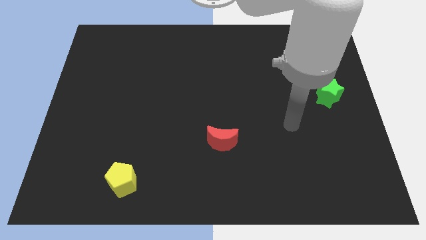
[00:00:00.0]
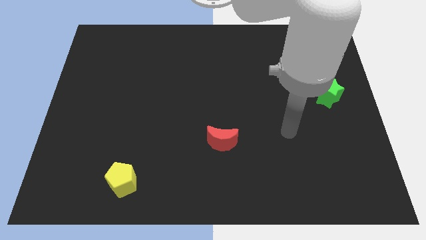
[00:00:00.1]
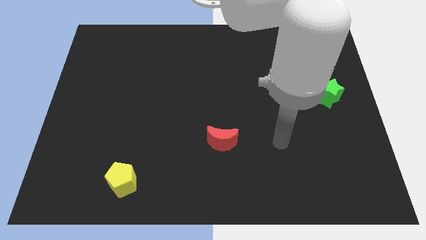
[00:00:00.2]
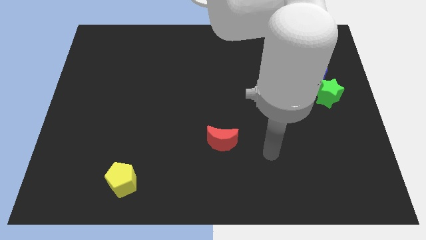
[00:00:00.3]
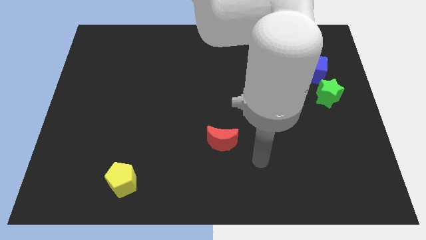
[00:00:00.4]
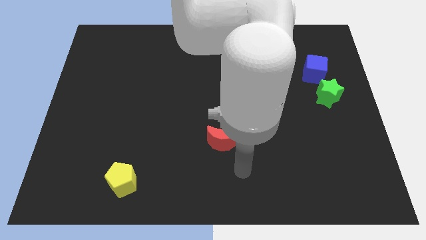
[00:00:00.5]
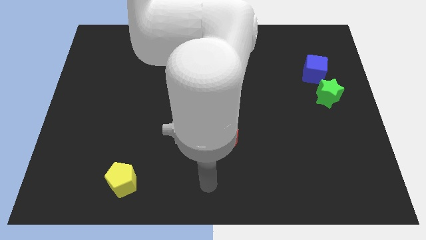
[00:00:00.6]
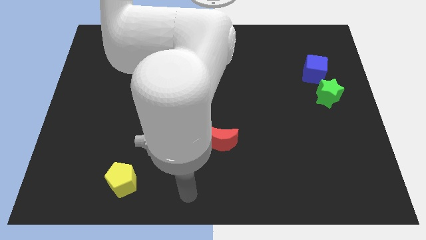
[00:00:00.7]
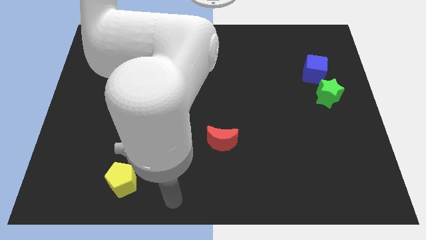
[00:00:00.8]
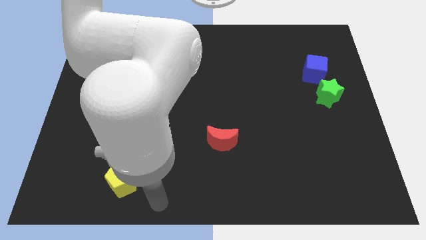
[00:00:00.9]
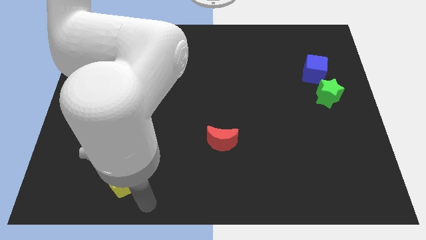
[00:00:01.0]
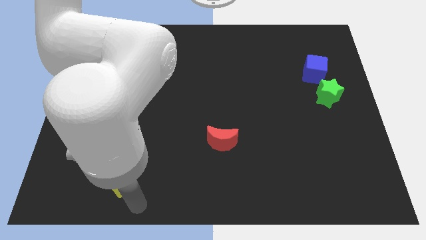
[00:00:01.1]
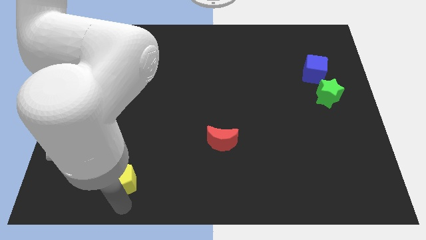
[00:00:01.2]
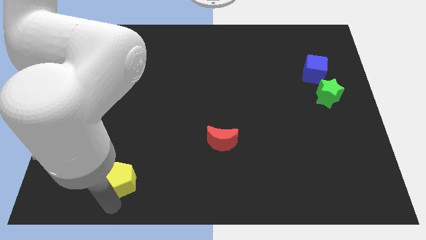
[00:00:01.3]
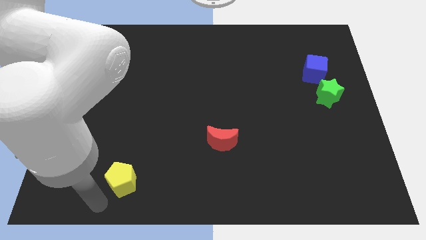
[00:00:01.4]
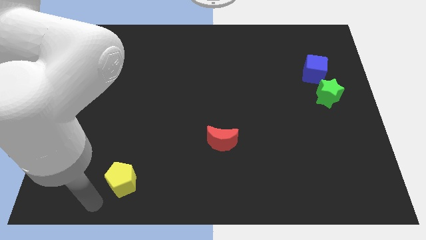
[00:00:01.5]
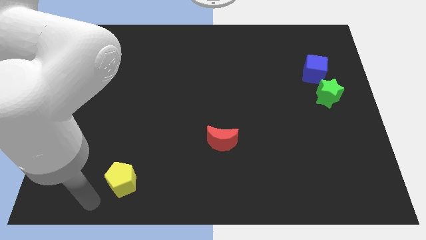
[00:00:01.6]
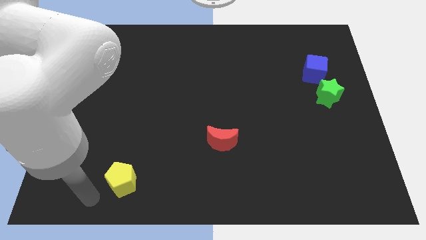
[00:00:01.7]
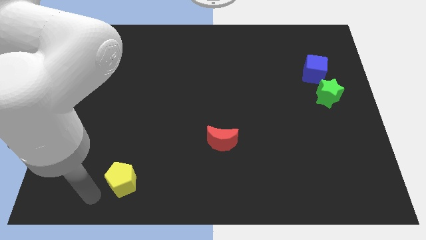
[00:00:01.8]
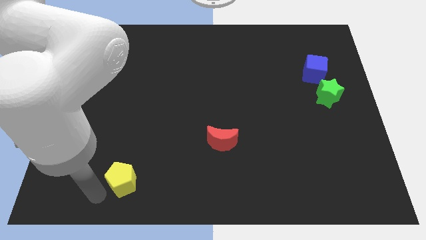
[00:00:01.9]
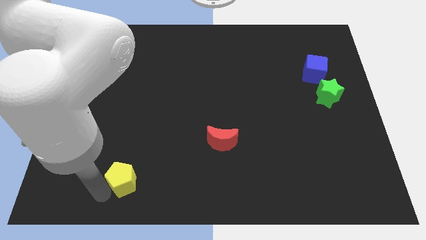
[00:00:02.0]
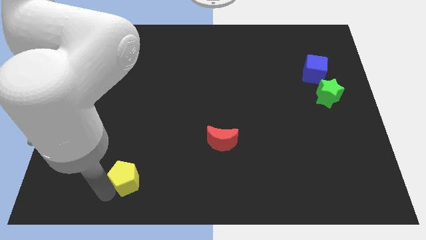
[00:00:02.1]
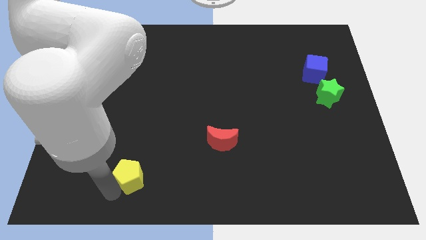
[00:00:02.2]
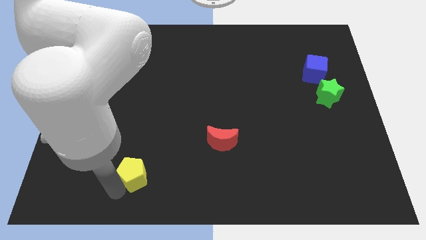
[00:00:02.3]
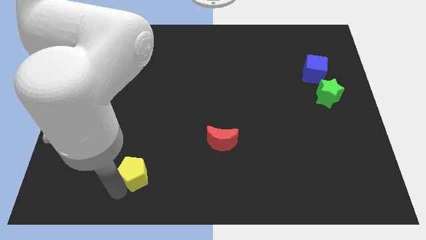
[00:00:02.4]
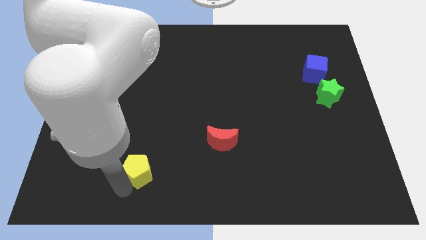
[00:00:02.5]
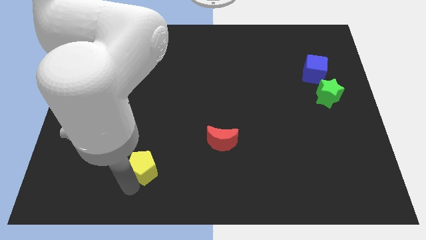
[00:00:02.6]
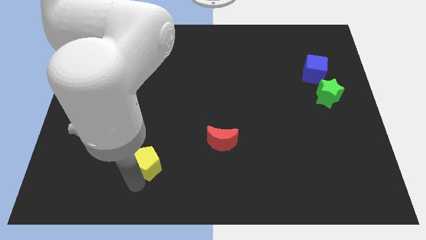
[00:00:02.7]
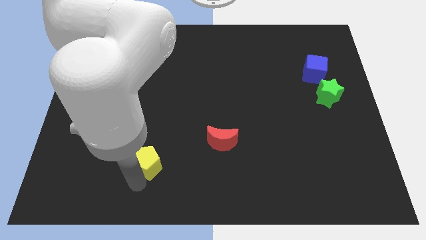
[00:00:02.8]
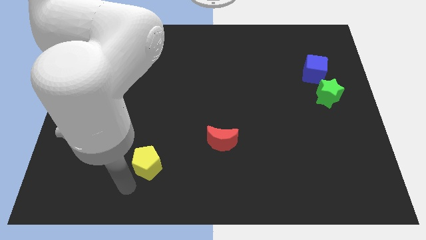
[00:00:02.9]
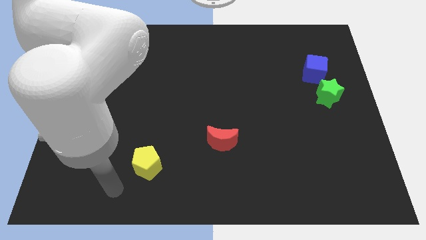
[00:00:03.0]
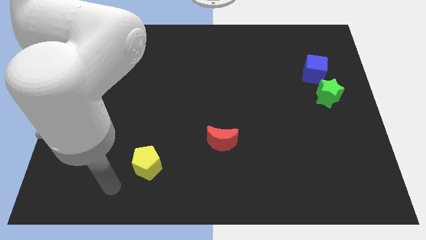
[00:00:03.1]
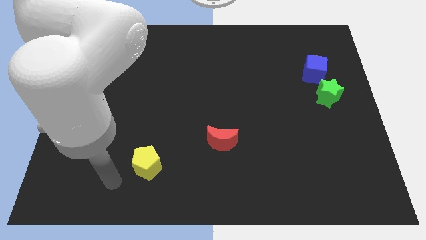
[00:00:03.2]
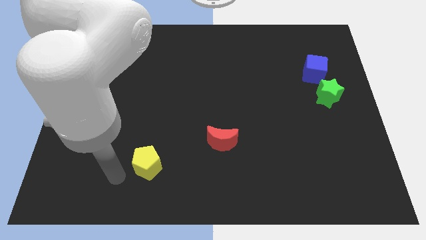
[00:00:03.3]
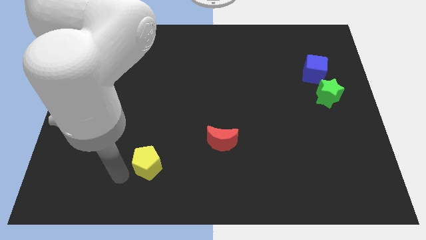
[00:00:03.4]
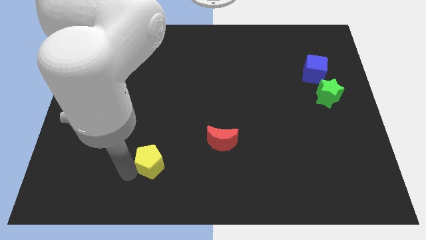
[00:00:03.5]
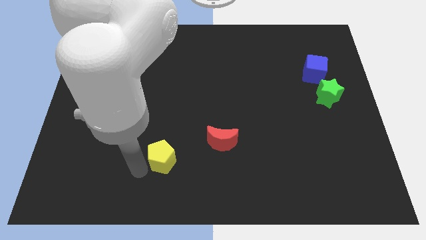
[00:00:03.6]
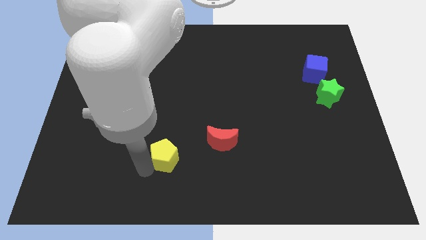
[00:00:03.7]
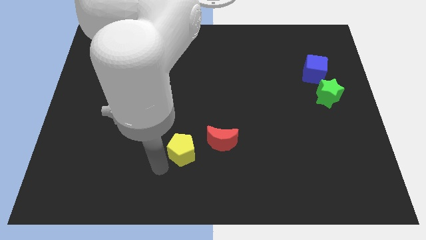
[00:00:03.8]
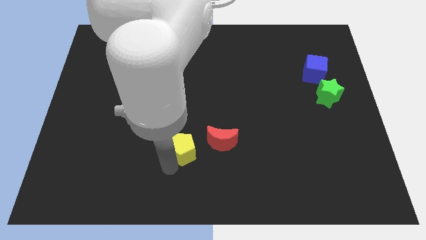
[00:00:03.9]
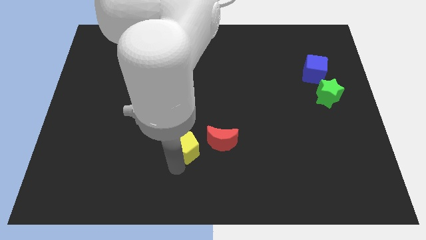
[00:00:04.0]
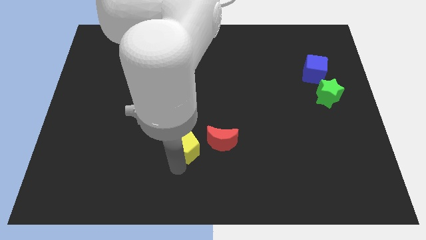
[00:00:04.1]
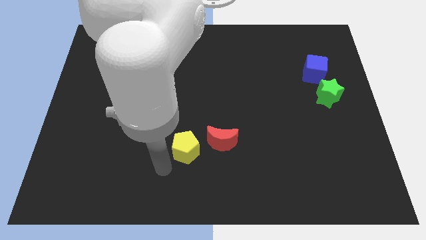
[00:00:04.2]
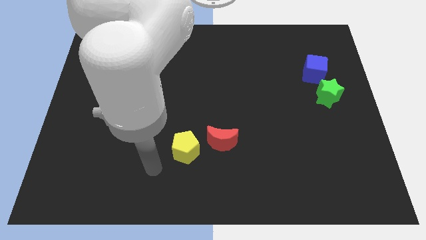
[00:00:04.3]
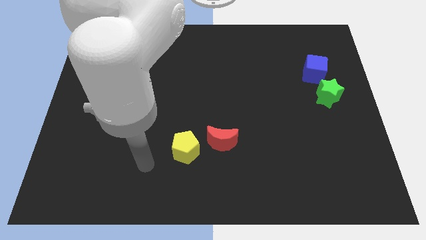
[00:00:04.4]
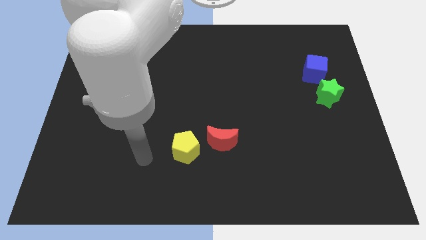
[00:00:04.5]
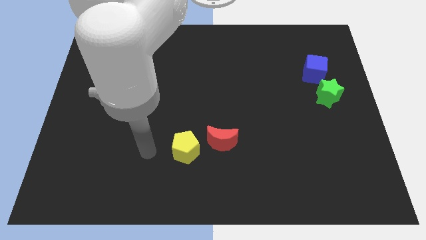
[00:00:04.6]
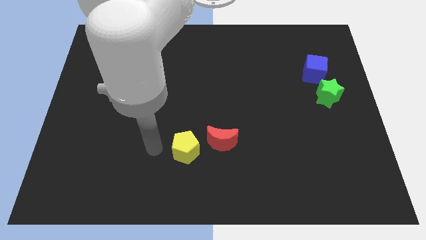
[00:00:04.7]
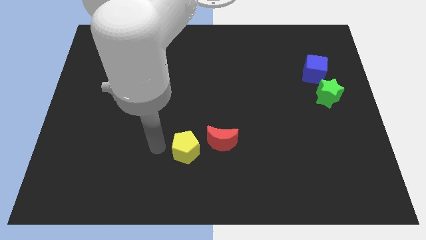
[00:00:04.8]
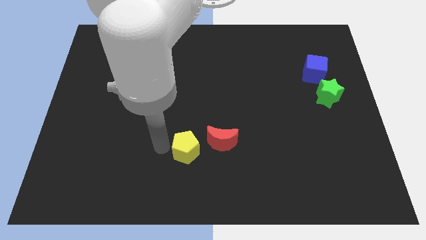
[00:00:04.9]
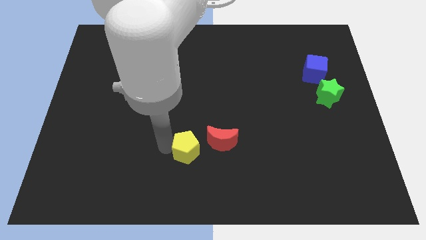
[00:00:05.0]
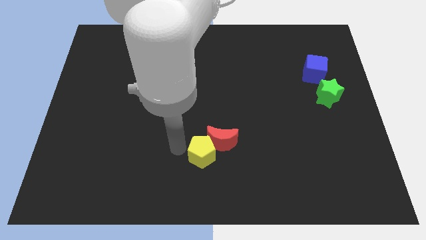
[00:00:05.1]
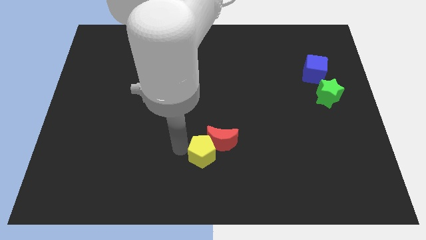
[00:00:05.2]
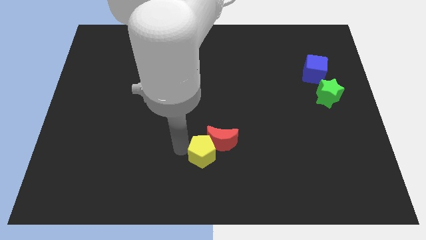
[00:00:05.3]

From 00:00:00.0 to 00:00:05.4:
push the pentagon to the red moon

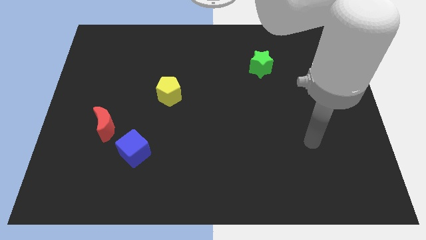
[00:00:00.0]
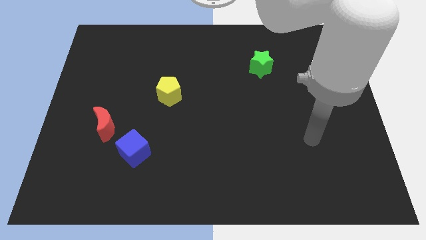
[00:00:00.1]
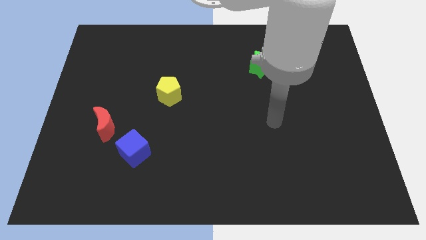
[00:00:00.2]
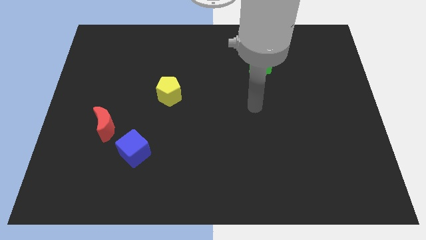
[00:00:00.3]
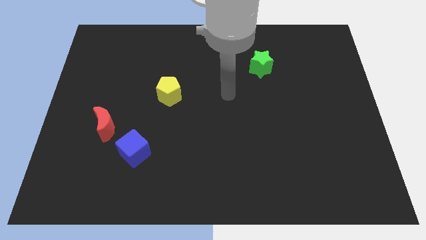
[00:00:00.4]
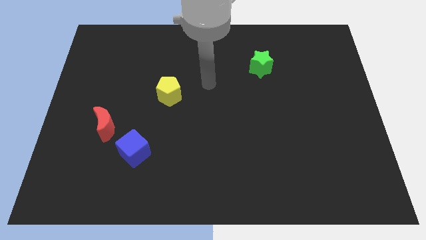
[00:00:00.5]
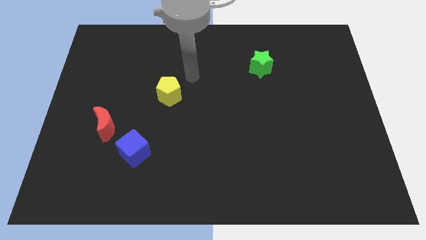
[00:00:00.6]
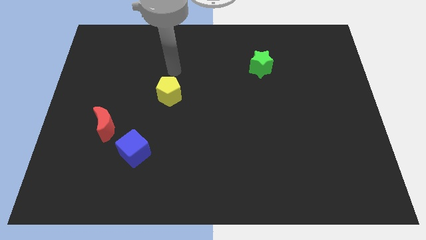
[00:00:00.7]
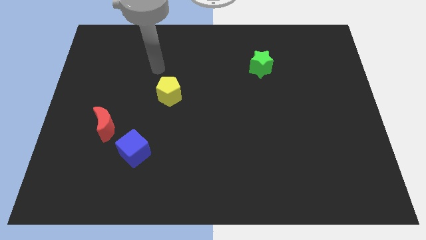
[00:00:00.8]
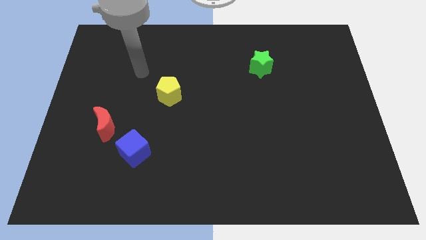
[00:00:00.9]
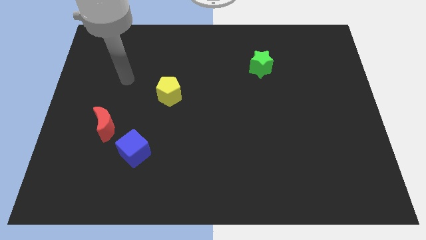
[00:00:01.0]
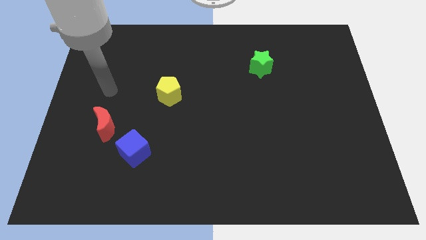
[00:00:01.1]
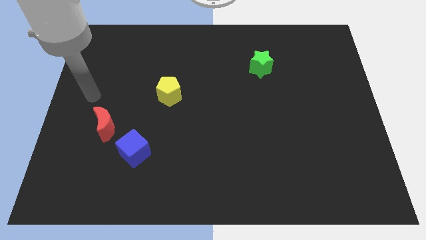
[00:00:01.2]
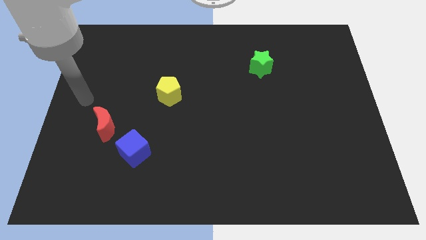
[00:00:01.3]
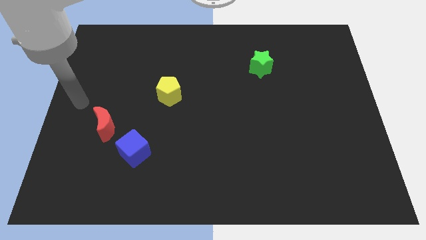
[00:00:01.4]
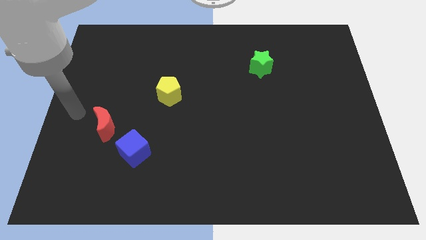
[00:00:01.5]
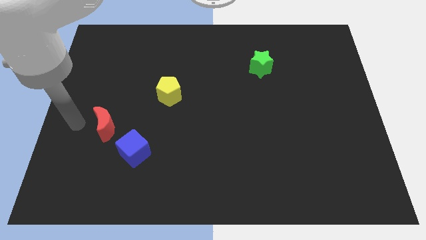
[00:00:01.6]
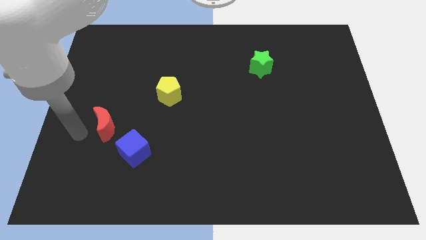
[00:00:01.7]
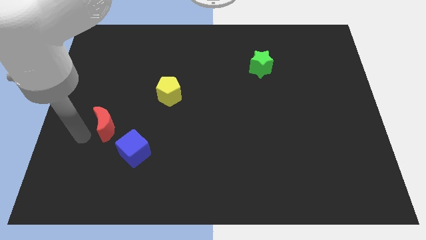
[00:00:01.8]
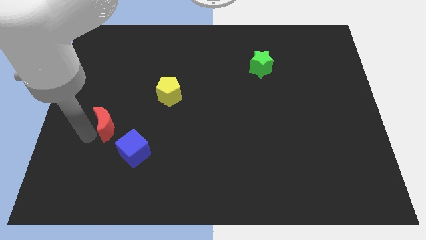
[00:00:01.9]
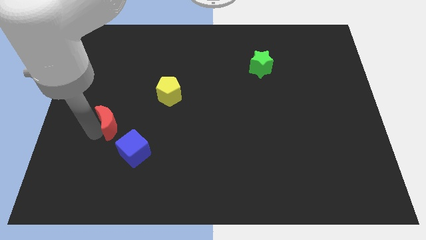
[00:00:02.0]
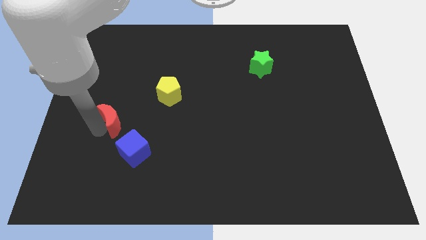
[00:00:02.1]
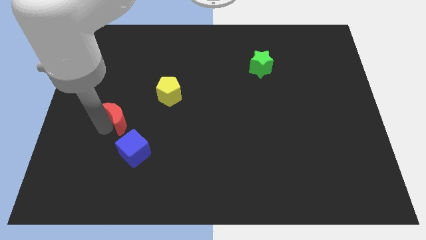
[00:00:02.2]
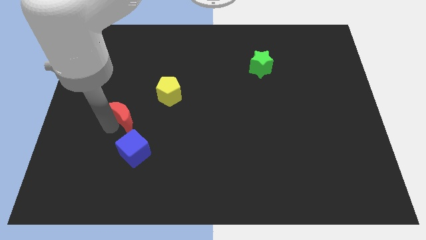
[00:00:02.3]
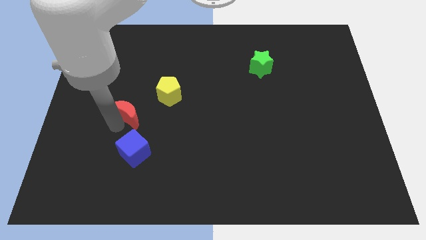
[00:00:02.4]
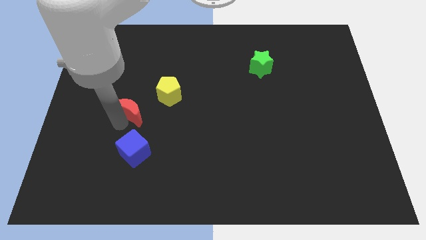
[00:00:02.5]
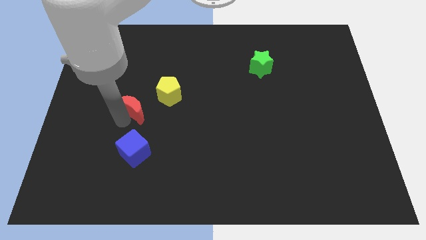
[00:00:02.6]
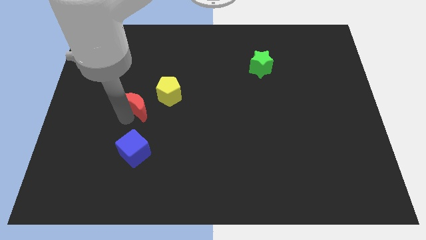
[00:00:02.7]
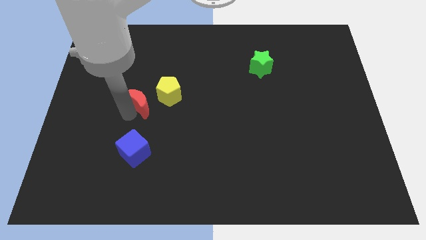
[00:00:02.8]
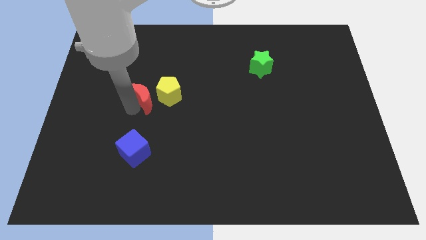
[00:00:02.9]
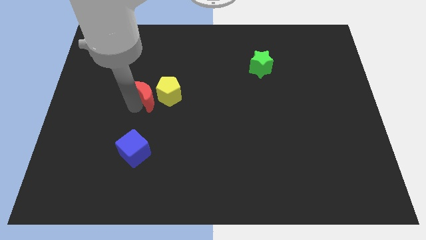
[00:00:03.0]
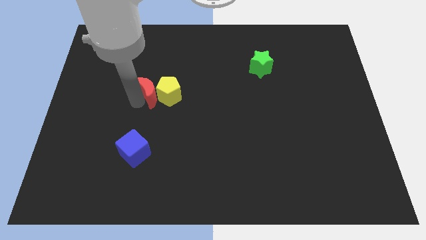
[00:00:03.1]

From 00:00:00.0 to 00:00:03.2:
move the red moon close to the pentagon
